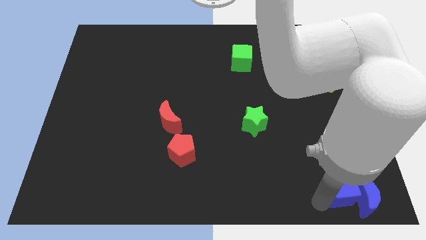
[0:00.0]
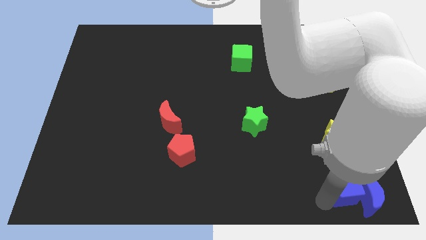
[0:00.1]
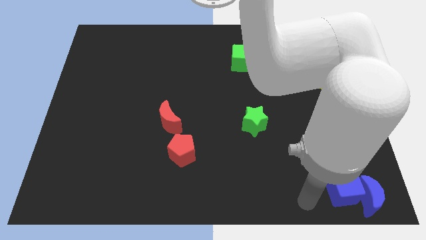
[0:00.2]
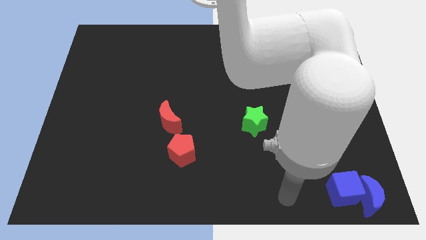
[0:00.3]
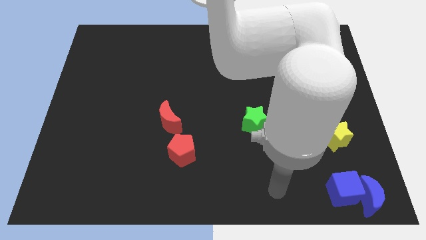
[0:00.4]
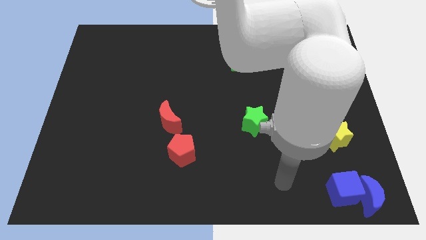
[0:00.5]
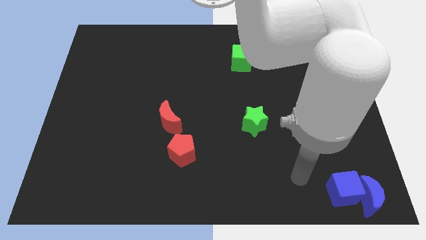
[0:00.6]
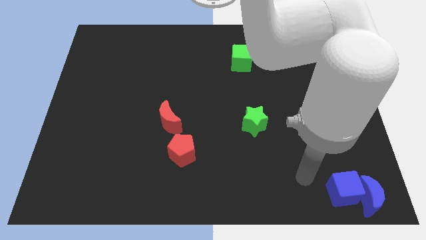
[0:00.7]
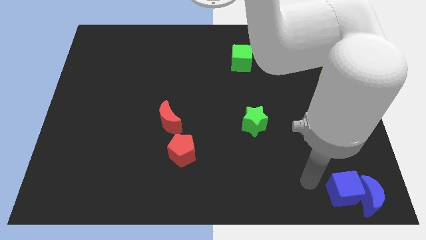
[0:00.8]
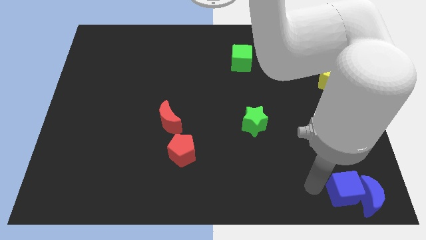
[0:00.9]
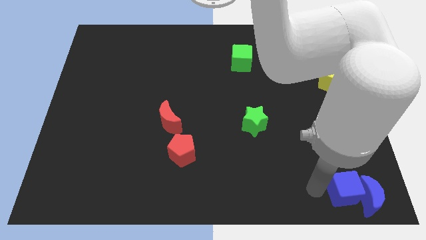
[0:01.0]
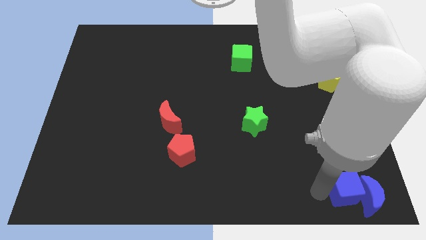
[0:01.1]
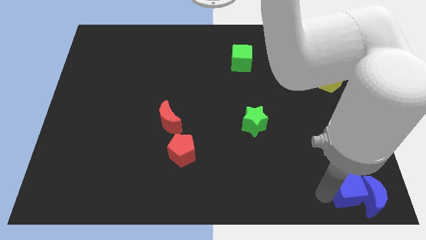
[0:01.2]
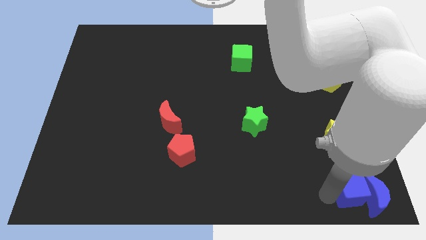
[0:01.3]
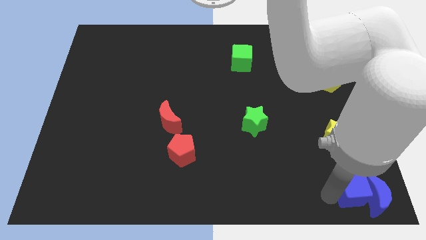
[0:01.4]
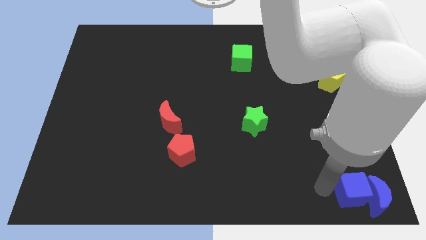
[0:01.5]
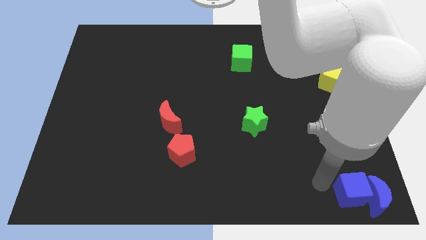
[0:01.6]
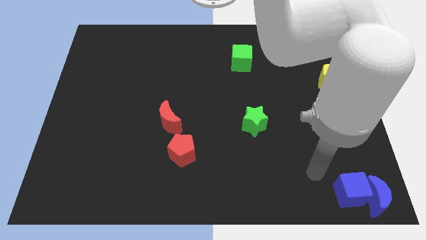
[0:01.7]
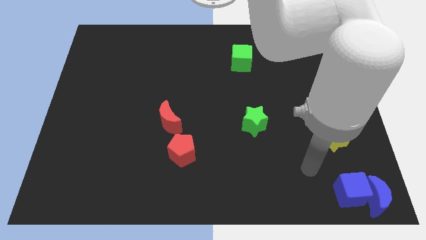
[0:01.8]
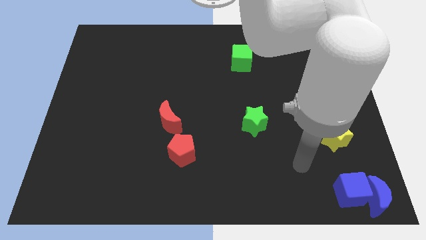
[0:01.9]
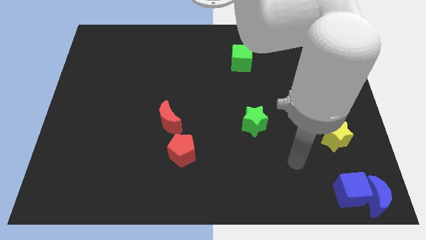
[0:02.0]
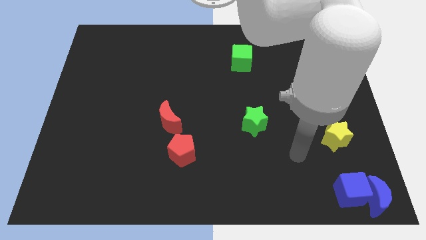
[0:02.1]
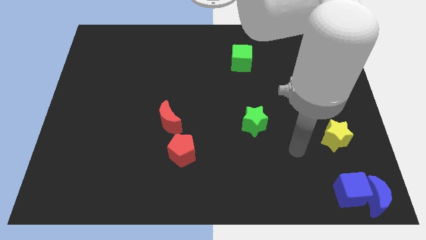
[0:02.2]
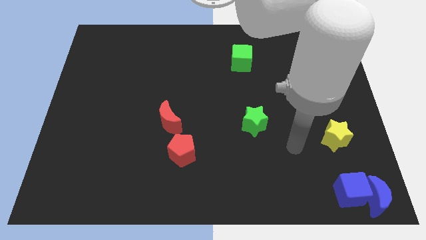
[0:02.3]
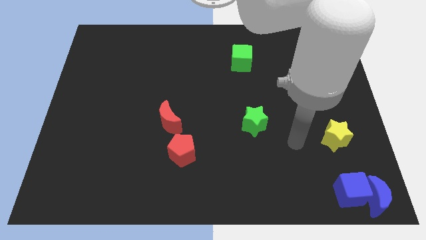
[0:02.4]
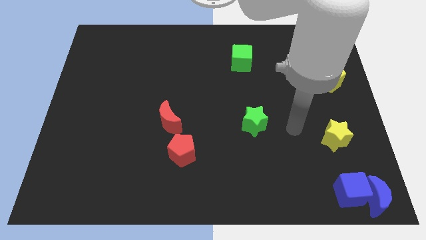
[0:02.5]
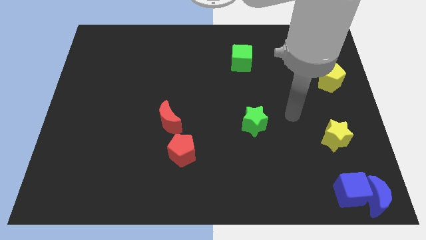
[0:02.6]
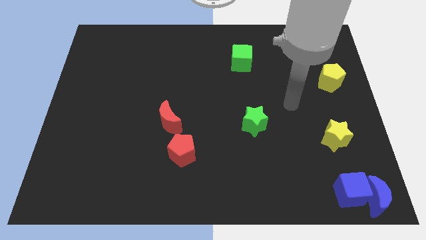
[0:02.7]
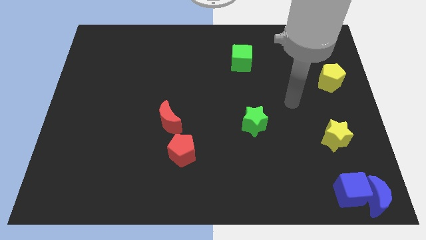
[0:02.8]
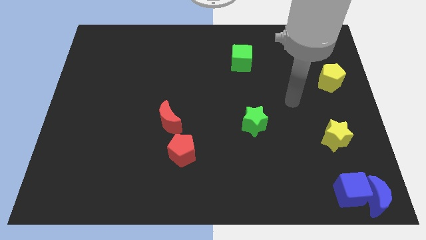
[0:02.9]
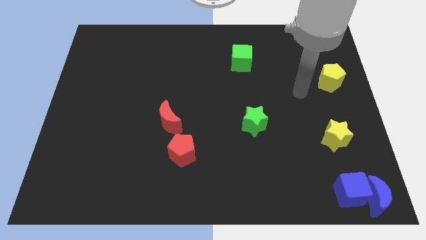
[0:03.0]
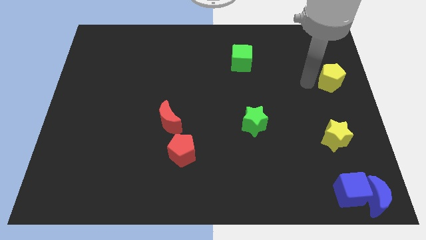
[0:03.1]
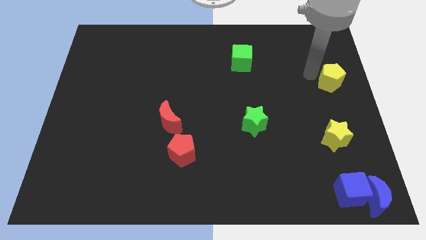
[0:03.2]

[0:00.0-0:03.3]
place your arm to the top left side of the yellow pentagon

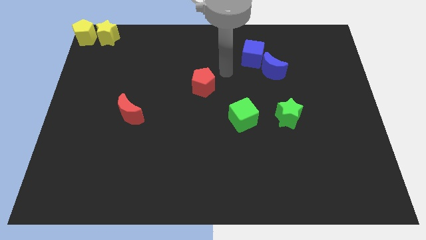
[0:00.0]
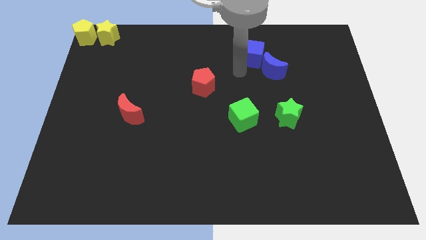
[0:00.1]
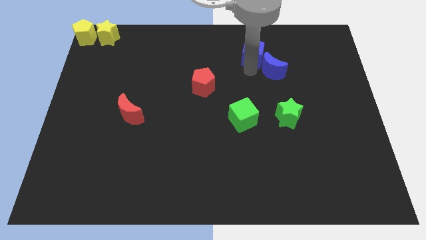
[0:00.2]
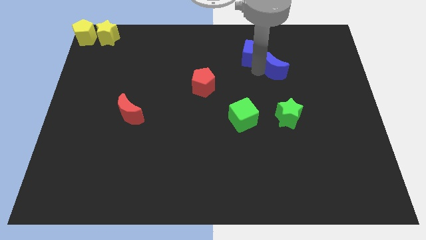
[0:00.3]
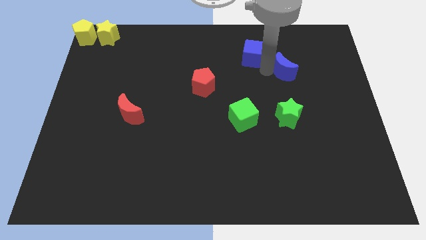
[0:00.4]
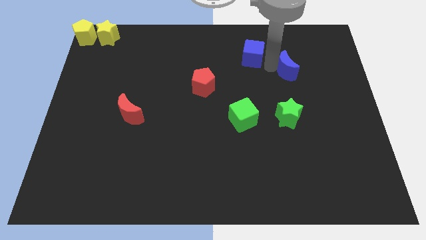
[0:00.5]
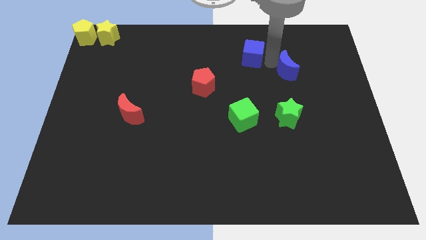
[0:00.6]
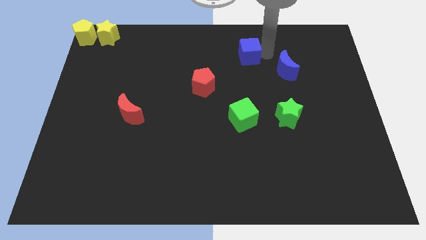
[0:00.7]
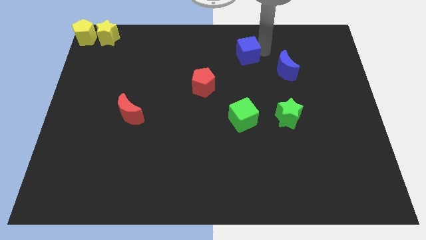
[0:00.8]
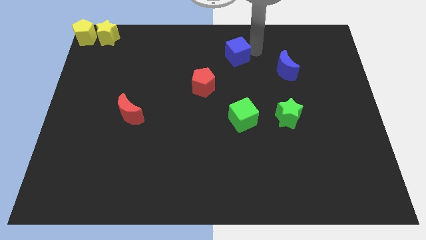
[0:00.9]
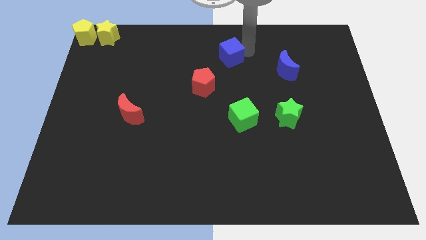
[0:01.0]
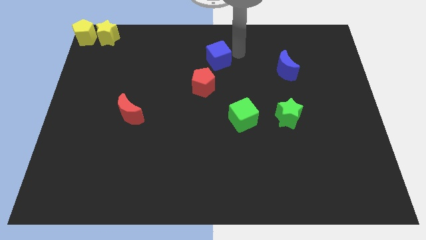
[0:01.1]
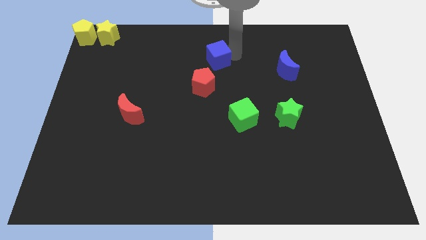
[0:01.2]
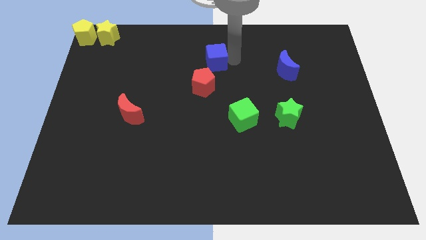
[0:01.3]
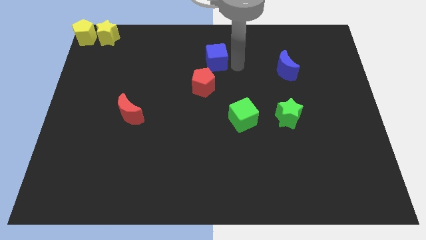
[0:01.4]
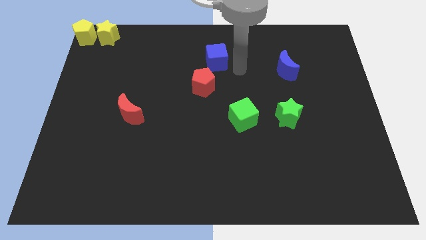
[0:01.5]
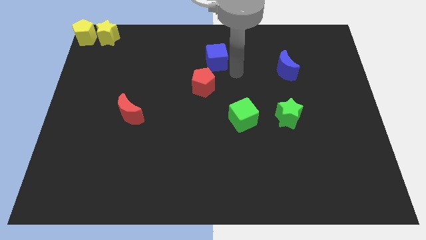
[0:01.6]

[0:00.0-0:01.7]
separate the blue cube from the blue crescent

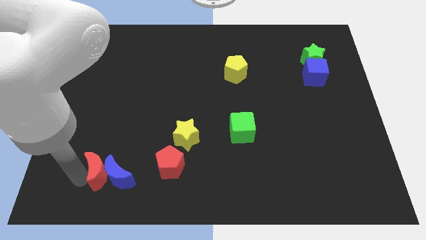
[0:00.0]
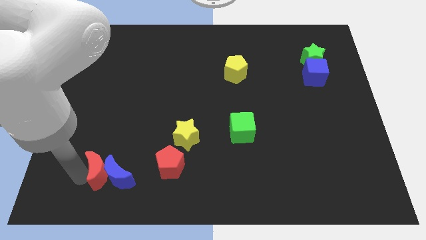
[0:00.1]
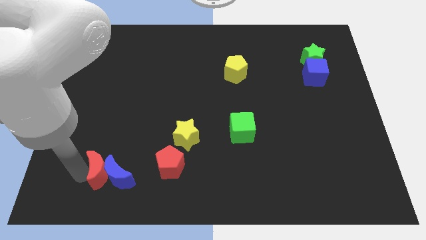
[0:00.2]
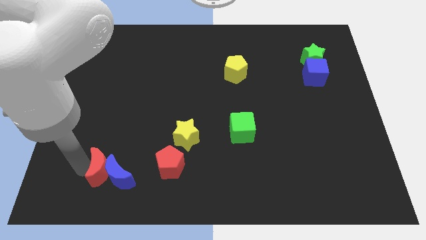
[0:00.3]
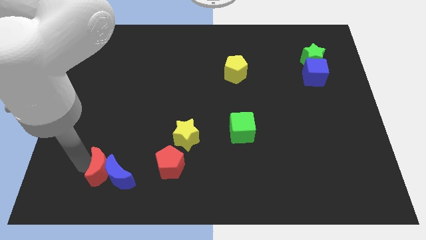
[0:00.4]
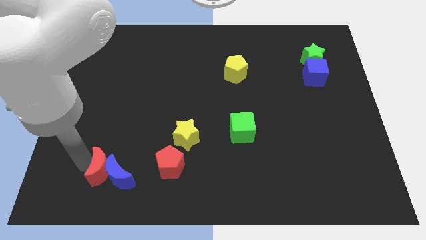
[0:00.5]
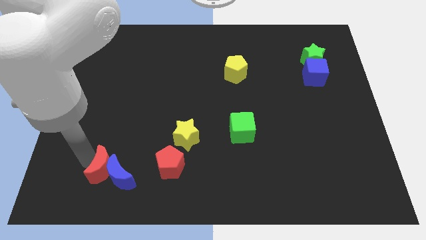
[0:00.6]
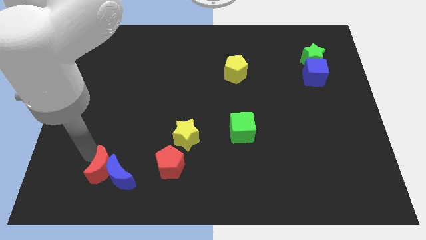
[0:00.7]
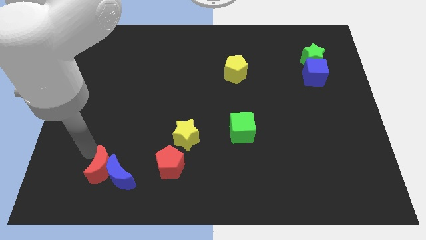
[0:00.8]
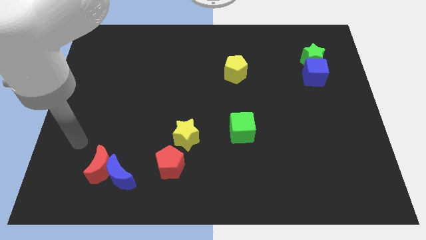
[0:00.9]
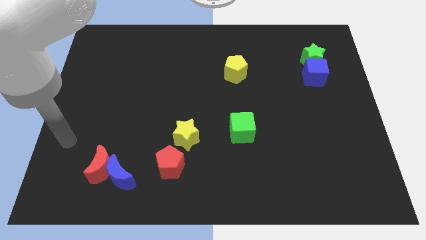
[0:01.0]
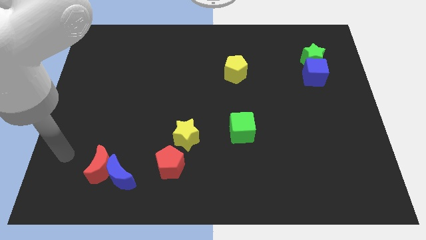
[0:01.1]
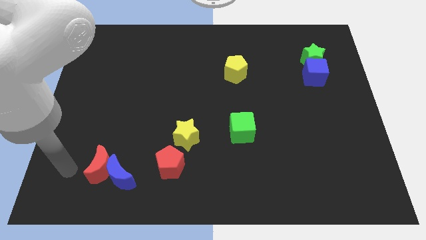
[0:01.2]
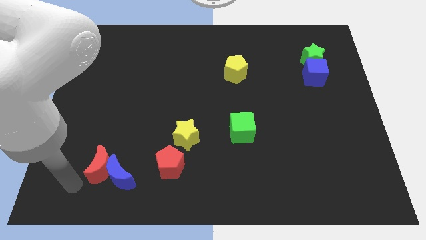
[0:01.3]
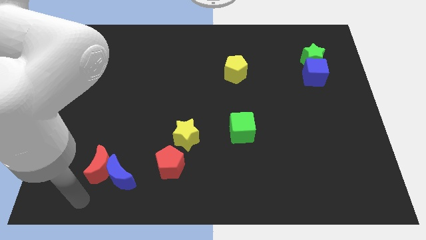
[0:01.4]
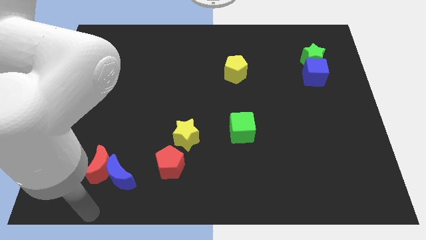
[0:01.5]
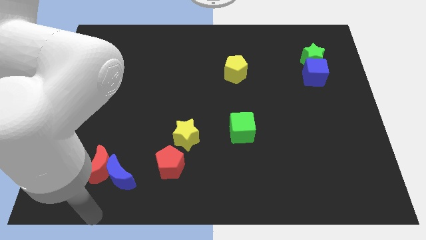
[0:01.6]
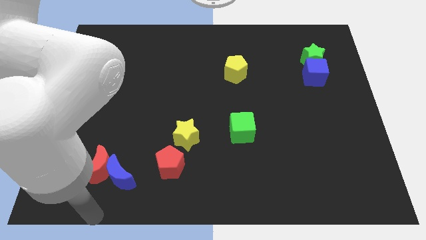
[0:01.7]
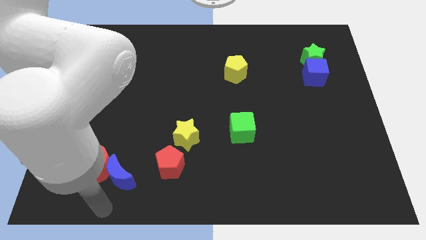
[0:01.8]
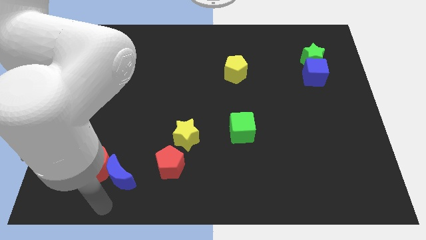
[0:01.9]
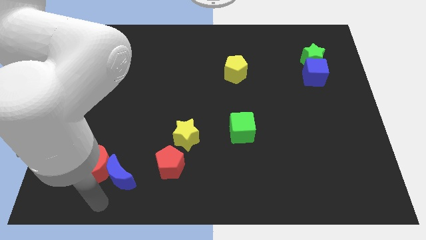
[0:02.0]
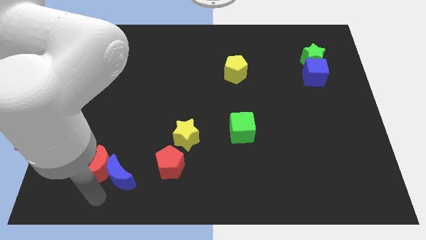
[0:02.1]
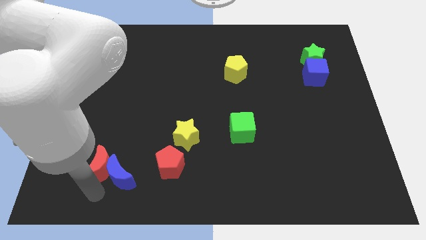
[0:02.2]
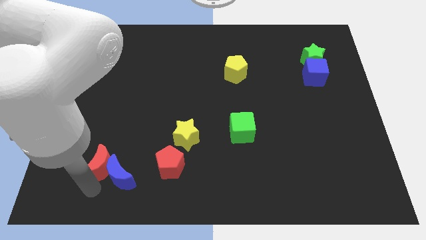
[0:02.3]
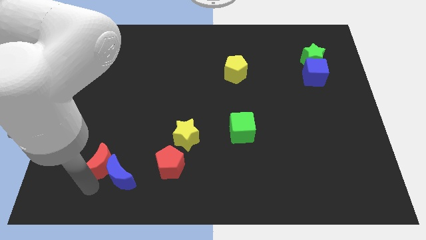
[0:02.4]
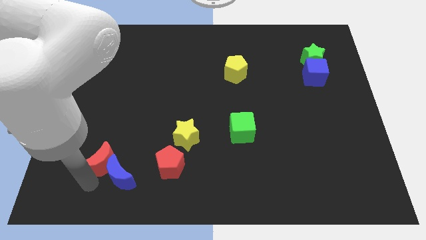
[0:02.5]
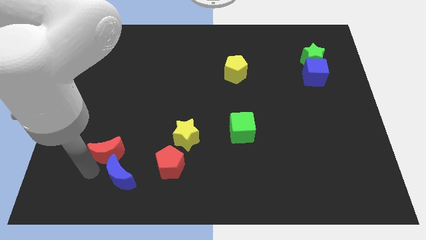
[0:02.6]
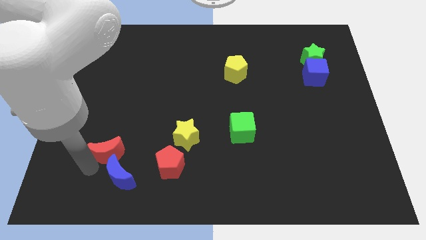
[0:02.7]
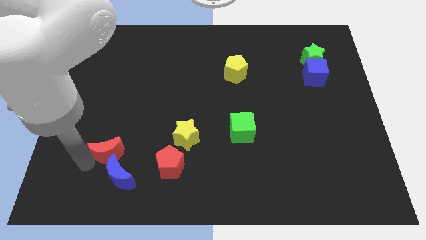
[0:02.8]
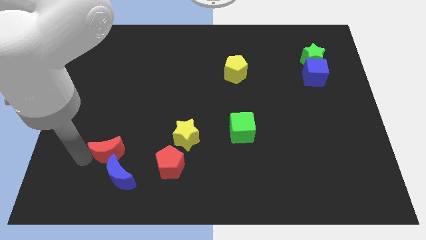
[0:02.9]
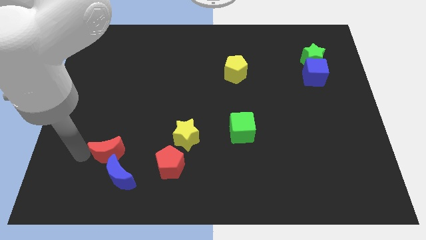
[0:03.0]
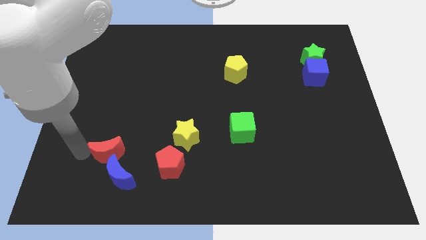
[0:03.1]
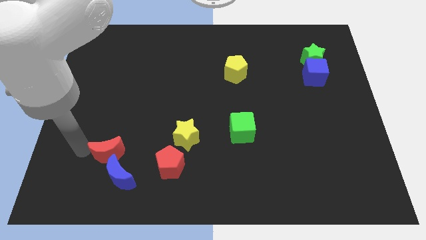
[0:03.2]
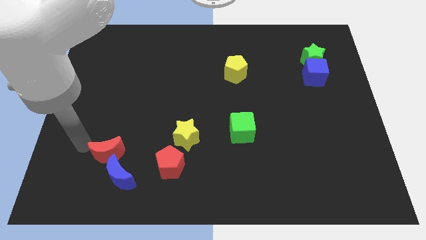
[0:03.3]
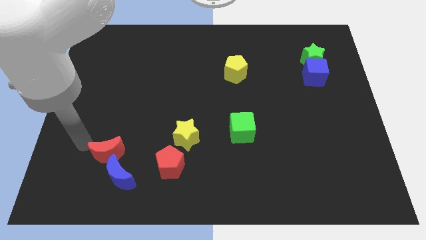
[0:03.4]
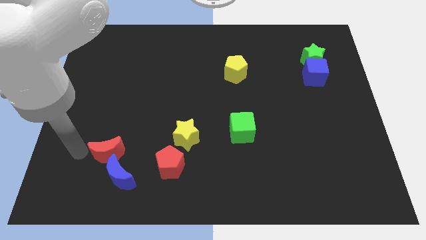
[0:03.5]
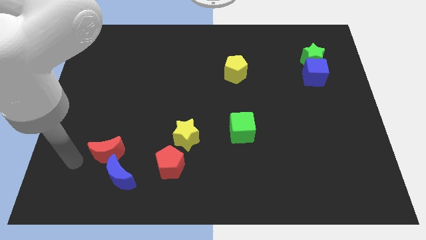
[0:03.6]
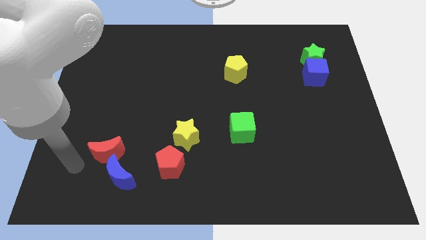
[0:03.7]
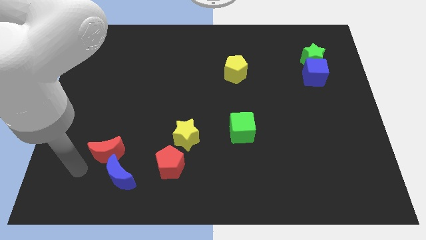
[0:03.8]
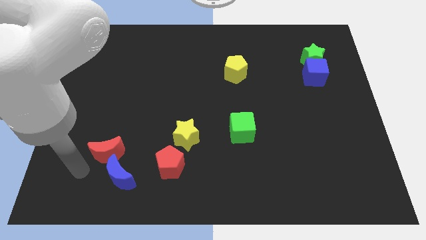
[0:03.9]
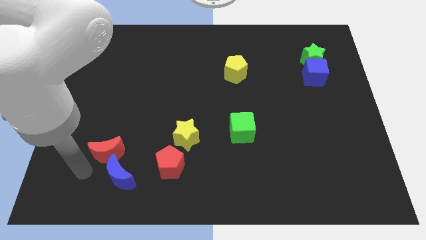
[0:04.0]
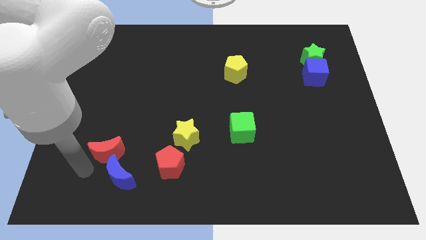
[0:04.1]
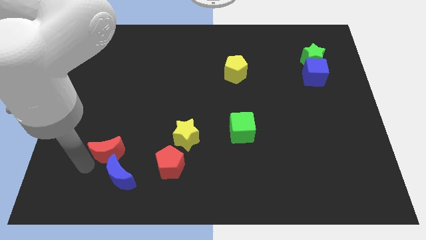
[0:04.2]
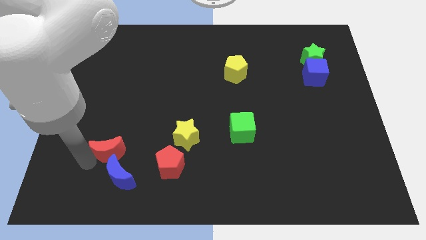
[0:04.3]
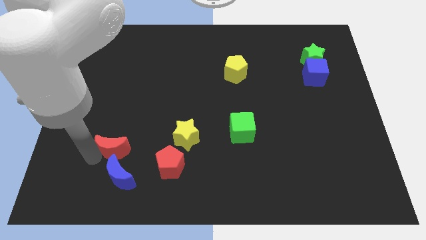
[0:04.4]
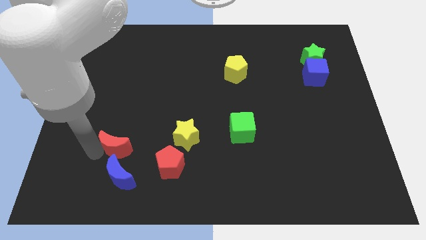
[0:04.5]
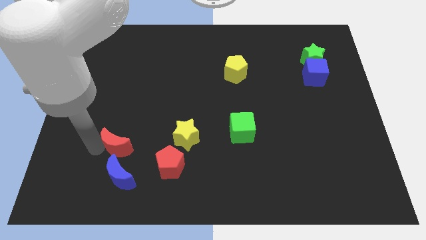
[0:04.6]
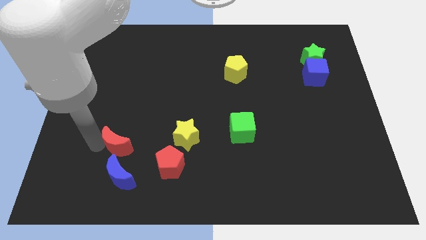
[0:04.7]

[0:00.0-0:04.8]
place the red crescent above the blue crescent
